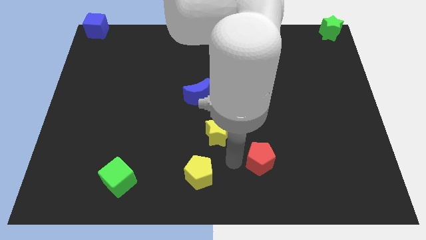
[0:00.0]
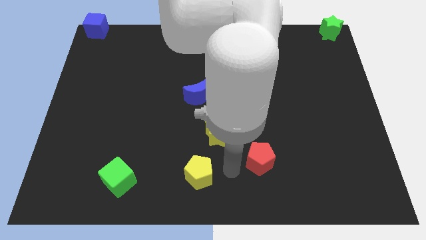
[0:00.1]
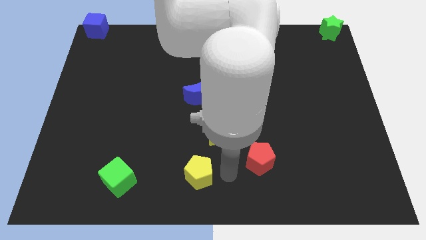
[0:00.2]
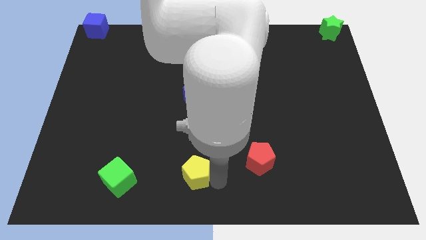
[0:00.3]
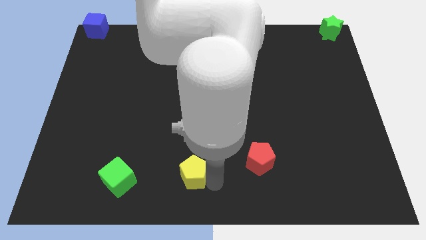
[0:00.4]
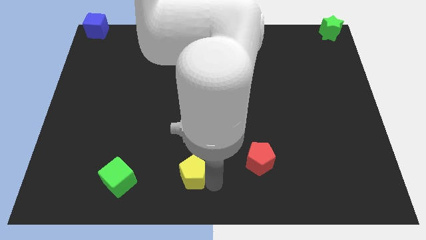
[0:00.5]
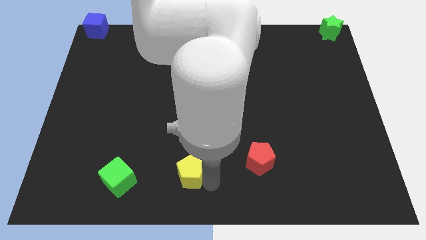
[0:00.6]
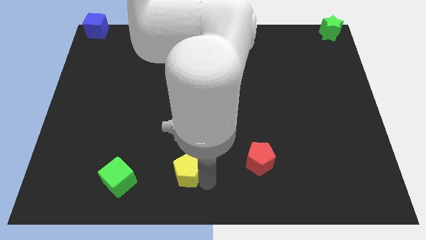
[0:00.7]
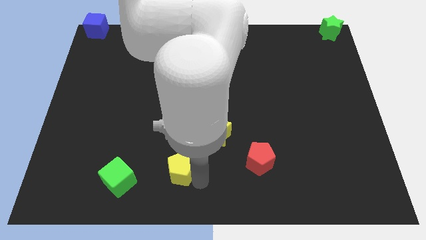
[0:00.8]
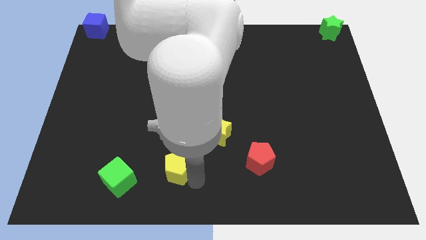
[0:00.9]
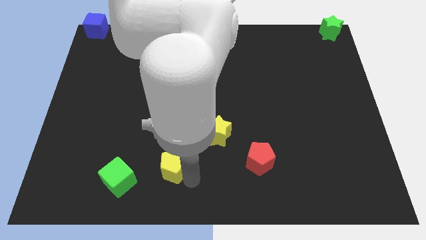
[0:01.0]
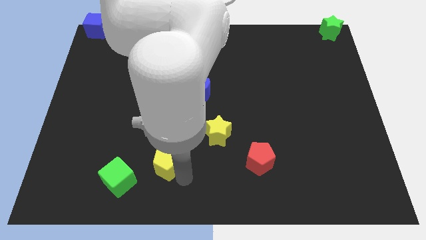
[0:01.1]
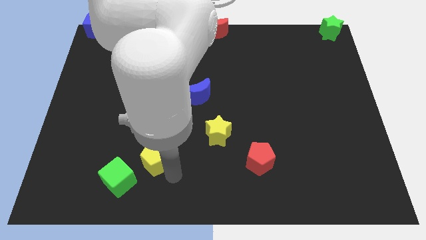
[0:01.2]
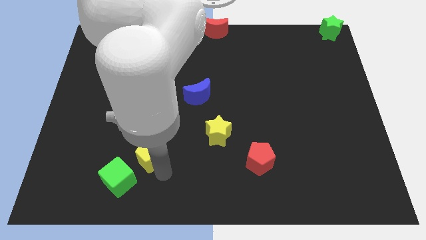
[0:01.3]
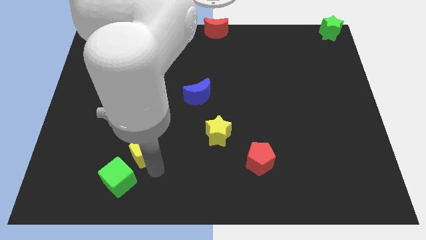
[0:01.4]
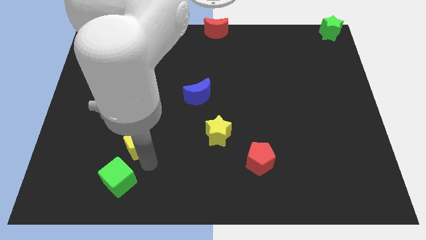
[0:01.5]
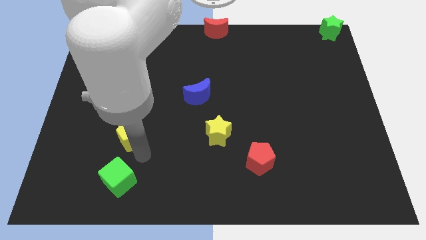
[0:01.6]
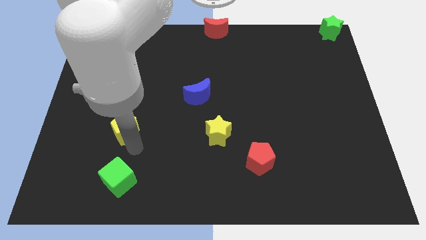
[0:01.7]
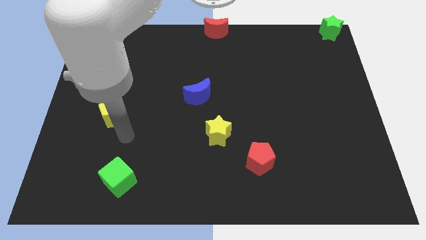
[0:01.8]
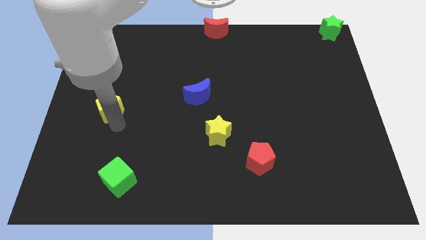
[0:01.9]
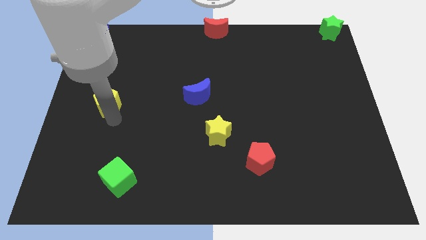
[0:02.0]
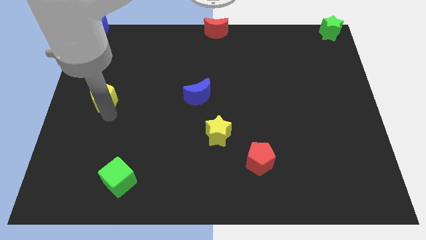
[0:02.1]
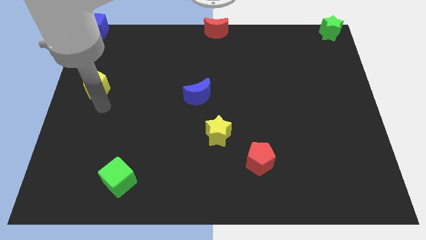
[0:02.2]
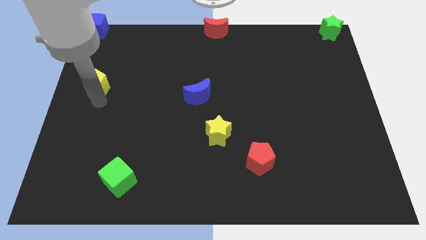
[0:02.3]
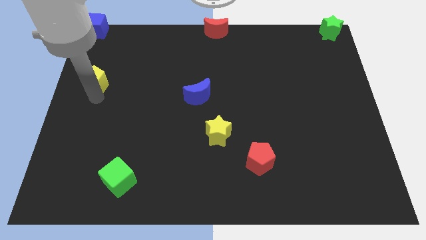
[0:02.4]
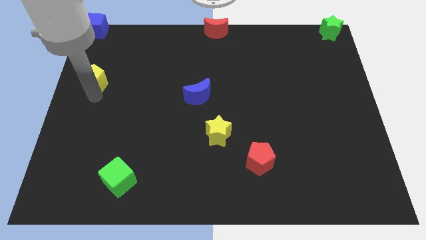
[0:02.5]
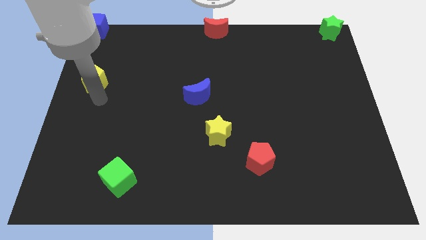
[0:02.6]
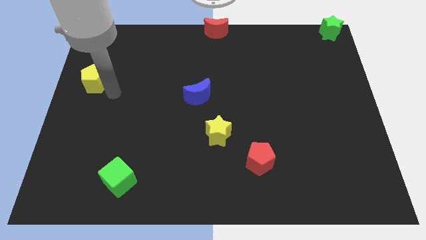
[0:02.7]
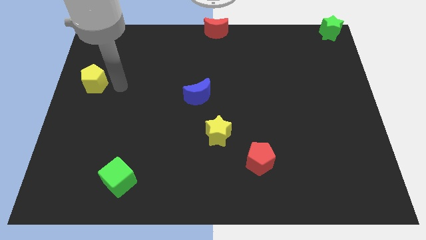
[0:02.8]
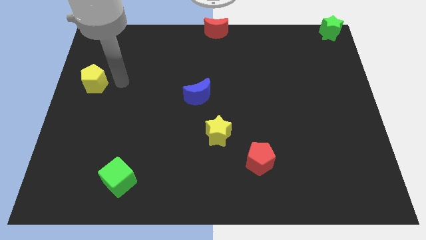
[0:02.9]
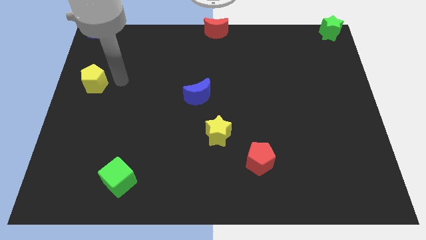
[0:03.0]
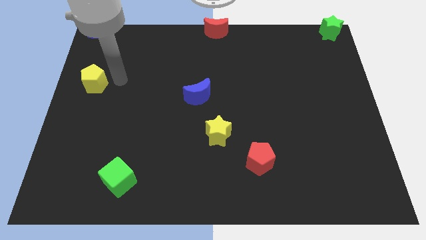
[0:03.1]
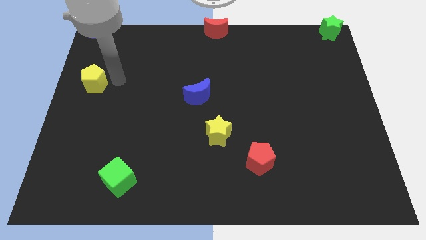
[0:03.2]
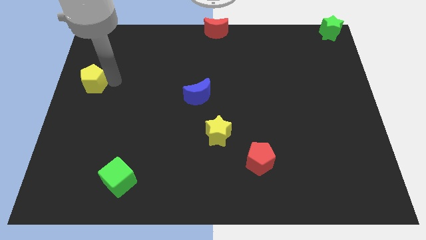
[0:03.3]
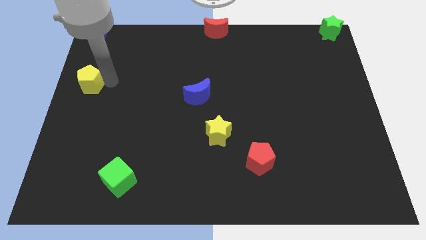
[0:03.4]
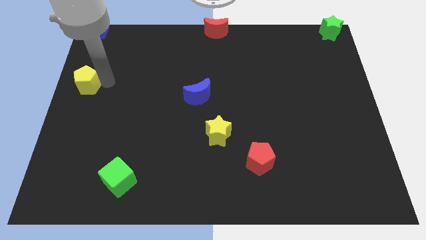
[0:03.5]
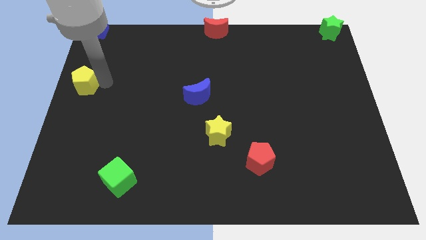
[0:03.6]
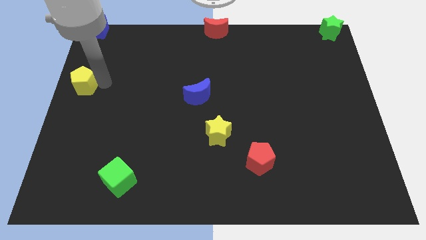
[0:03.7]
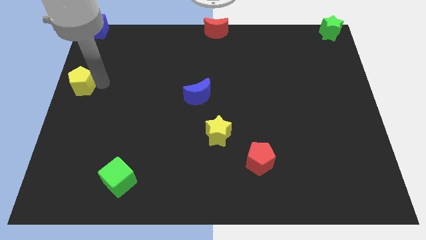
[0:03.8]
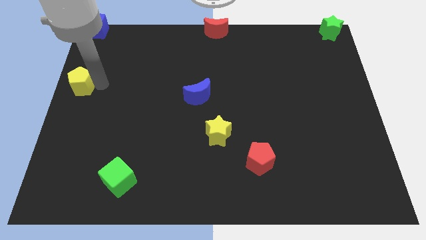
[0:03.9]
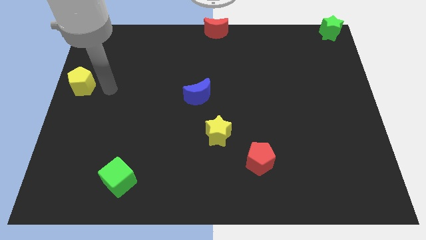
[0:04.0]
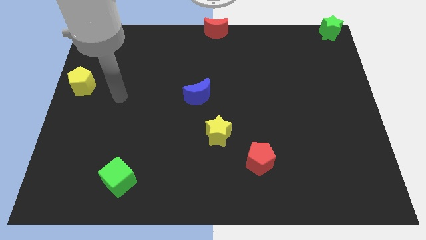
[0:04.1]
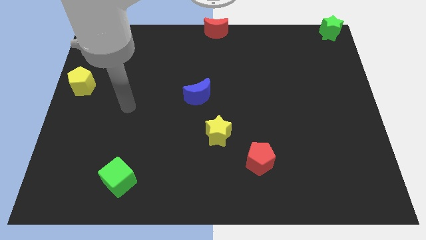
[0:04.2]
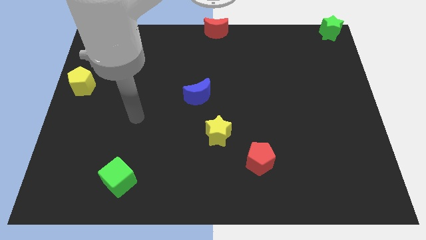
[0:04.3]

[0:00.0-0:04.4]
push the yellow pentagon diagonally on the top left side of the green cube

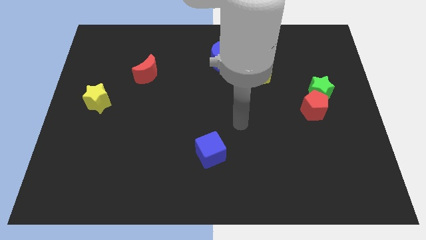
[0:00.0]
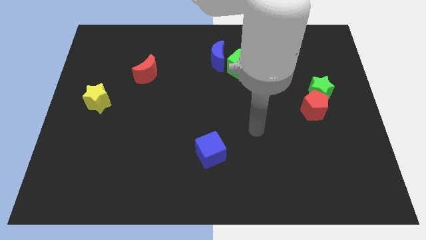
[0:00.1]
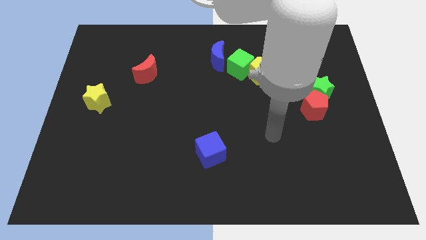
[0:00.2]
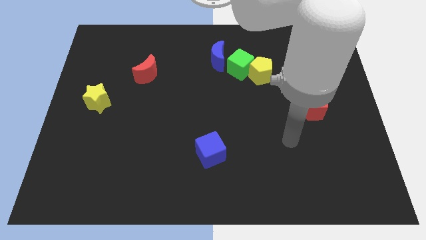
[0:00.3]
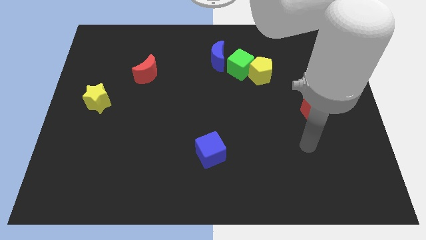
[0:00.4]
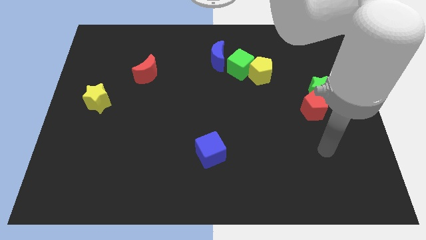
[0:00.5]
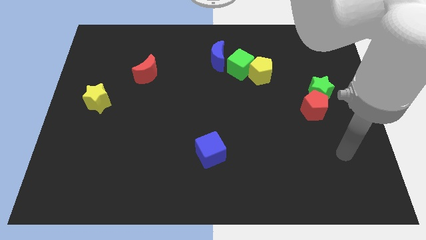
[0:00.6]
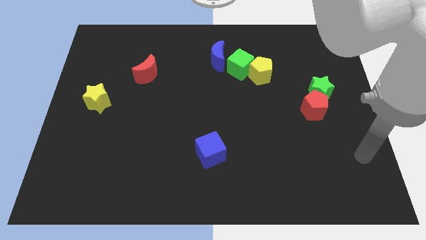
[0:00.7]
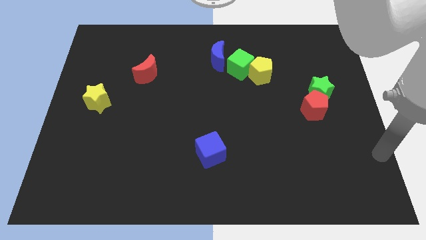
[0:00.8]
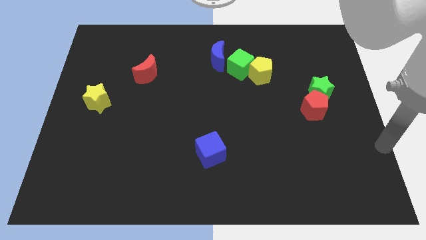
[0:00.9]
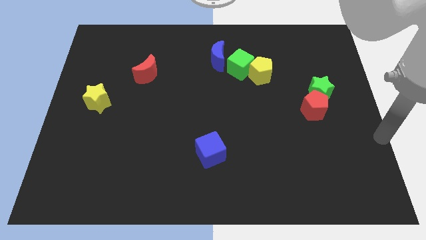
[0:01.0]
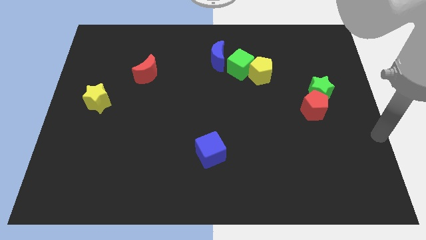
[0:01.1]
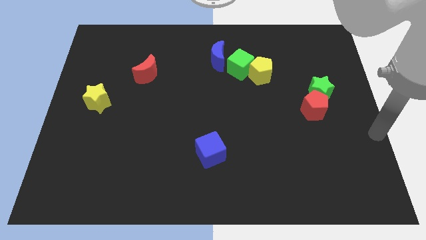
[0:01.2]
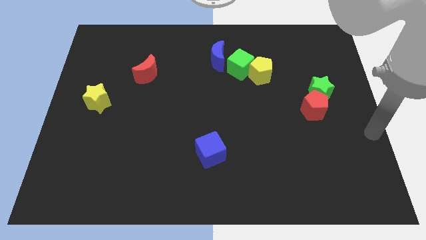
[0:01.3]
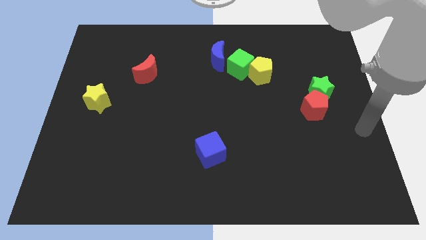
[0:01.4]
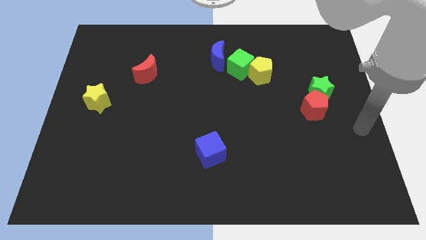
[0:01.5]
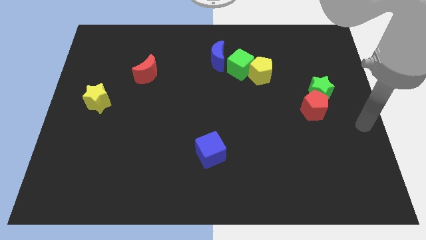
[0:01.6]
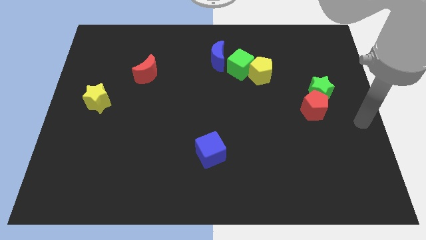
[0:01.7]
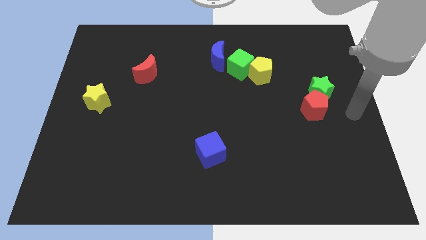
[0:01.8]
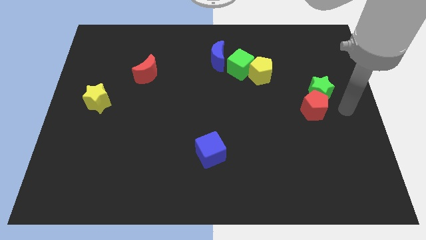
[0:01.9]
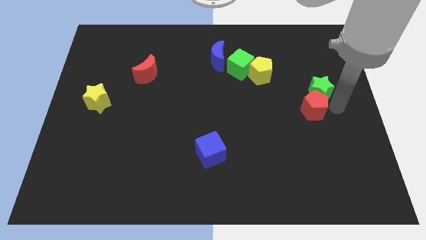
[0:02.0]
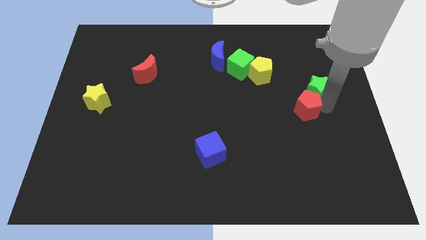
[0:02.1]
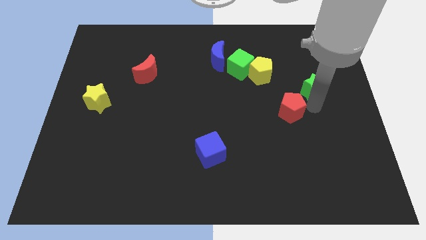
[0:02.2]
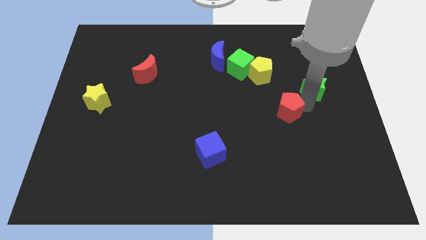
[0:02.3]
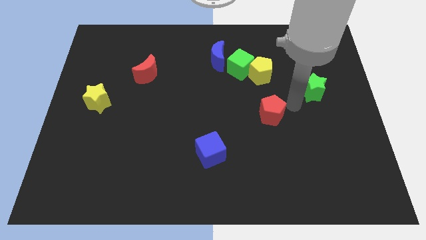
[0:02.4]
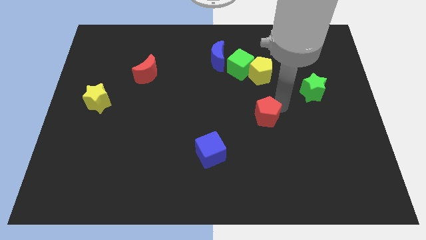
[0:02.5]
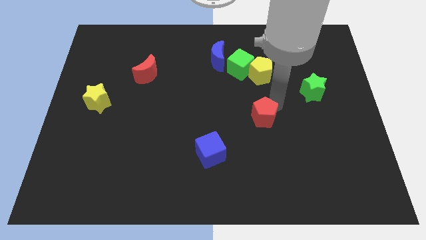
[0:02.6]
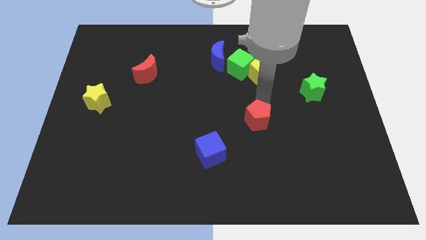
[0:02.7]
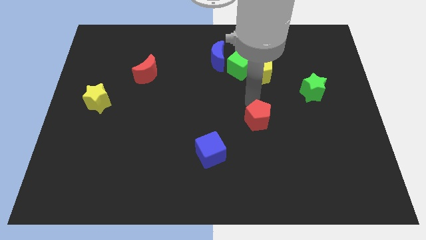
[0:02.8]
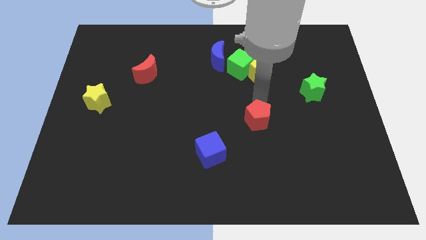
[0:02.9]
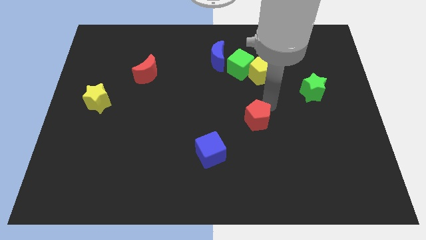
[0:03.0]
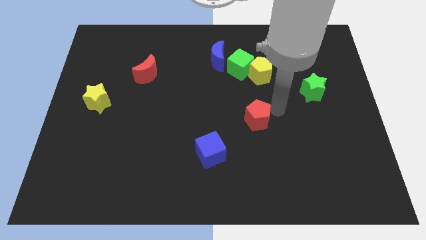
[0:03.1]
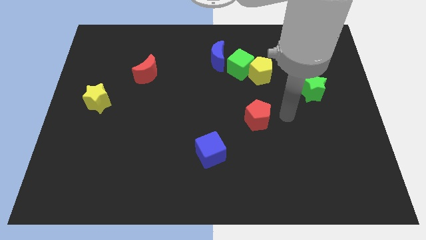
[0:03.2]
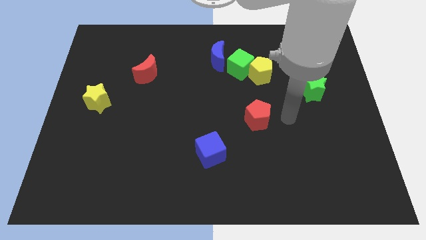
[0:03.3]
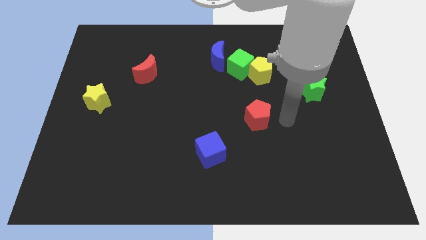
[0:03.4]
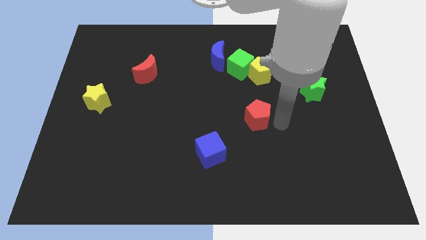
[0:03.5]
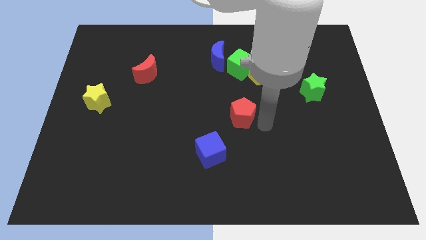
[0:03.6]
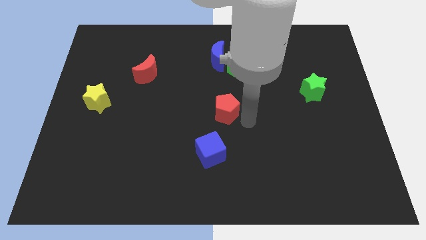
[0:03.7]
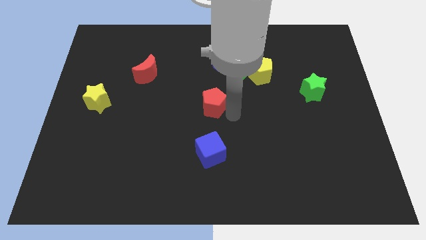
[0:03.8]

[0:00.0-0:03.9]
push the red pentagon in between the blue moon and blue cube

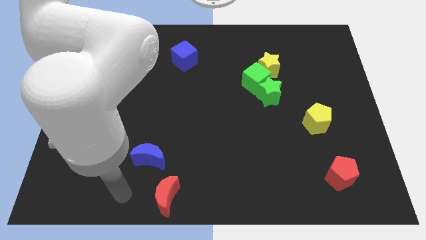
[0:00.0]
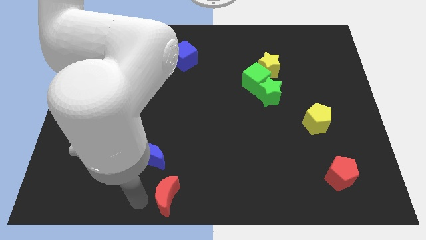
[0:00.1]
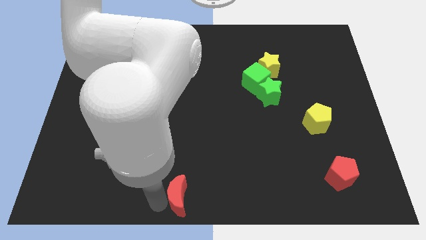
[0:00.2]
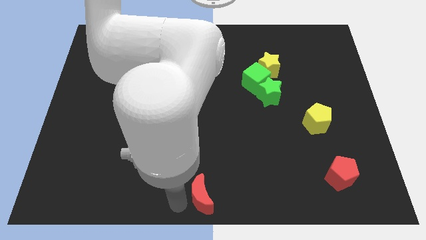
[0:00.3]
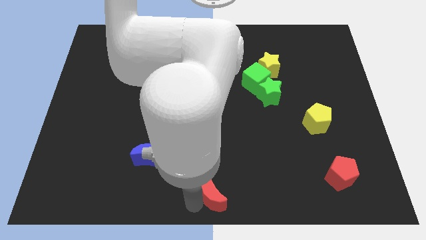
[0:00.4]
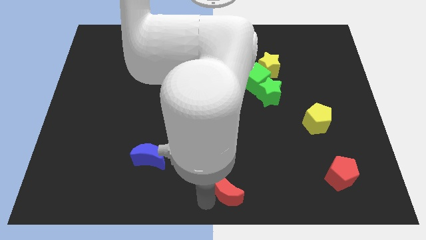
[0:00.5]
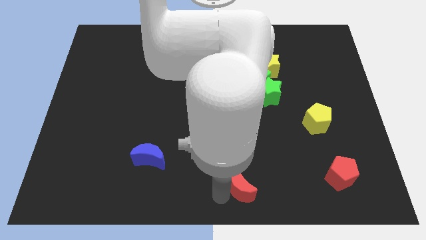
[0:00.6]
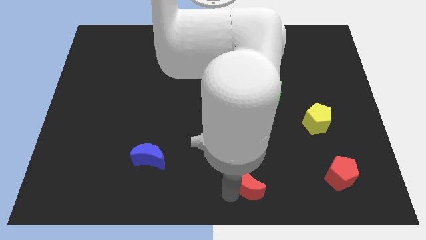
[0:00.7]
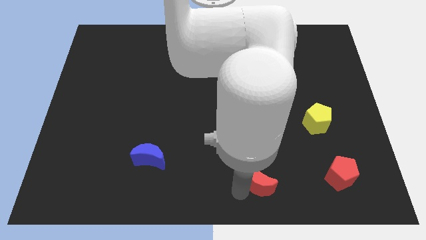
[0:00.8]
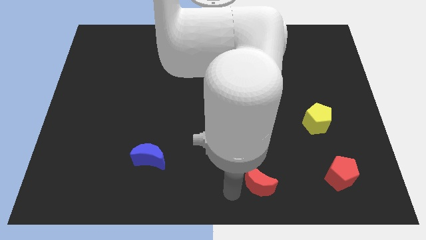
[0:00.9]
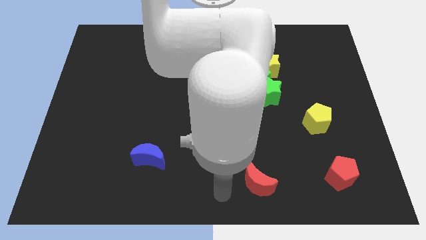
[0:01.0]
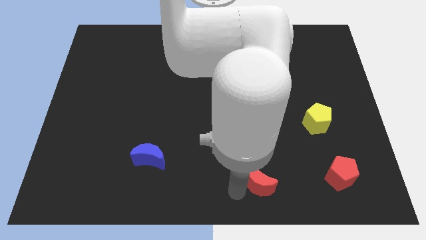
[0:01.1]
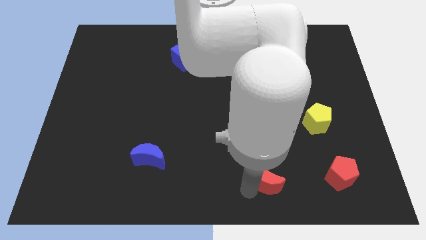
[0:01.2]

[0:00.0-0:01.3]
place red crescent parallel left to red pentagon
